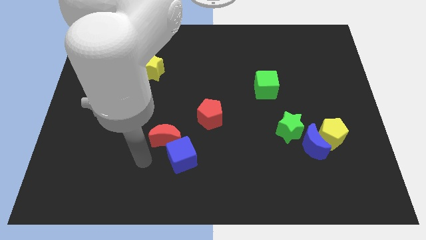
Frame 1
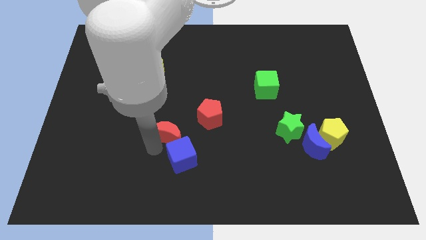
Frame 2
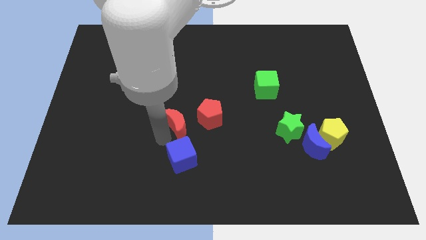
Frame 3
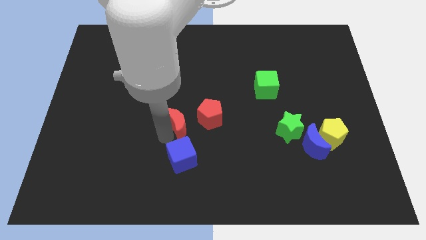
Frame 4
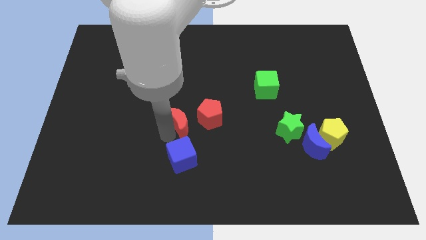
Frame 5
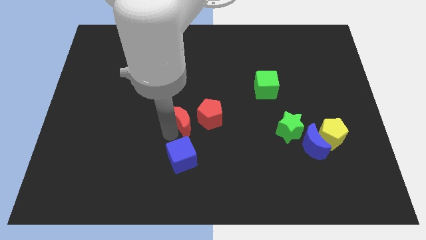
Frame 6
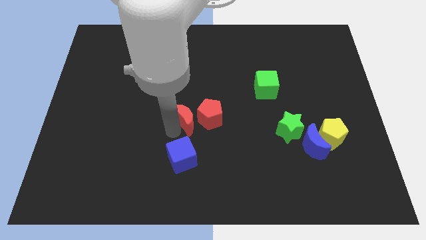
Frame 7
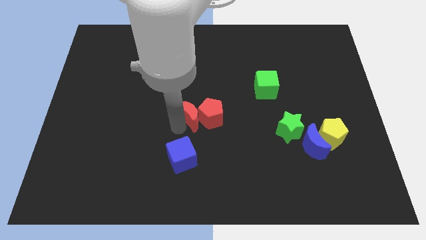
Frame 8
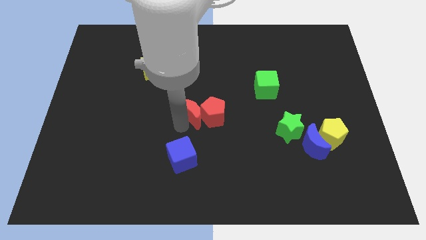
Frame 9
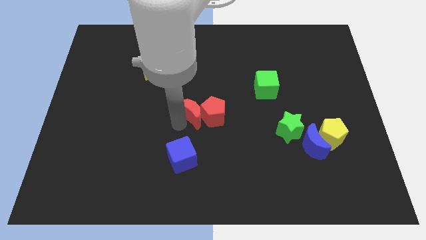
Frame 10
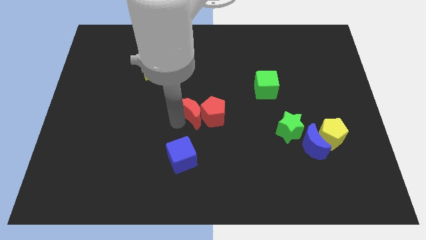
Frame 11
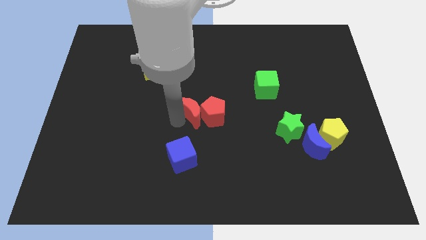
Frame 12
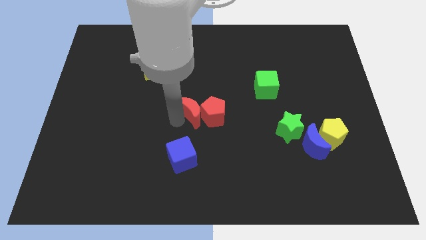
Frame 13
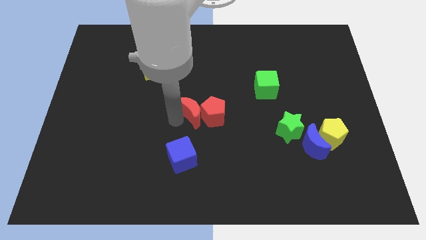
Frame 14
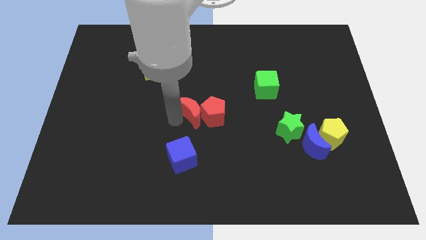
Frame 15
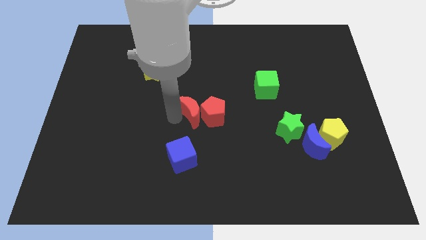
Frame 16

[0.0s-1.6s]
push the red crescent along with the red pentagon to the centre of the board

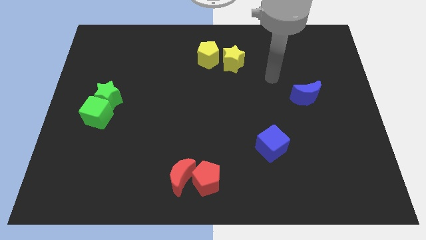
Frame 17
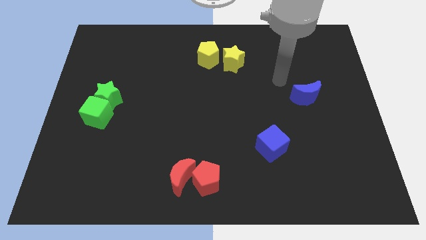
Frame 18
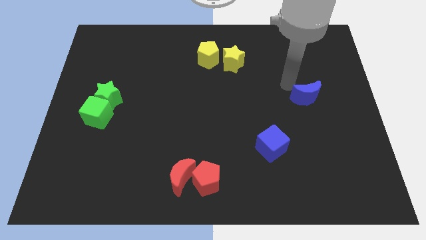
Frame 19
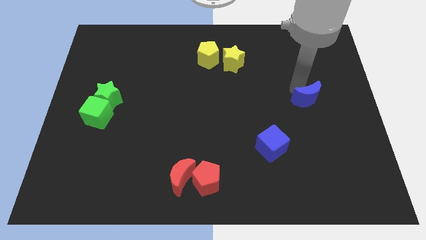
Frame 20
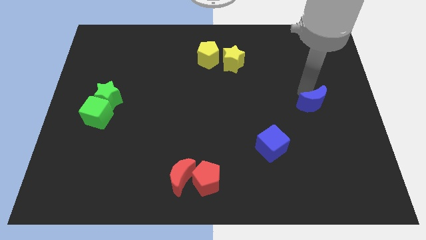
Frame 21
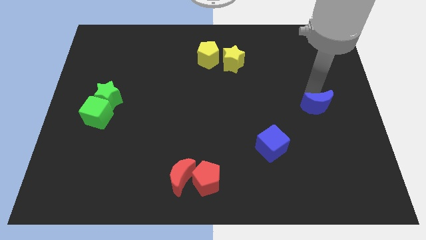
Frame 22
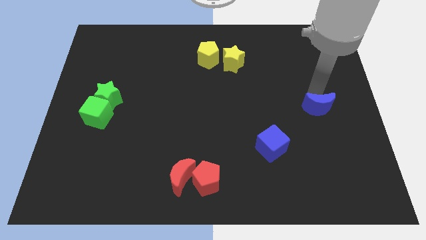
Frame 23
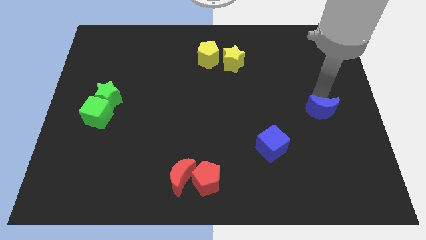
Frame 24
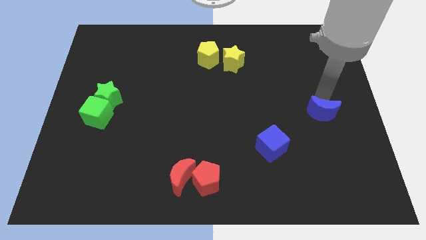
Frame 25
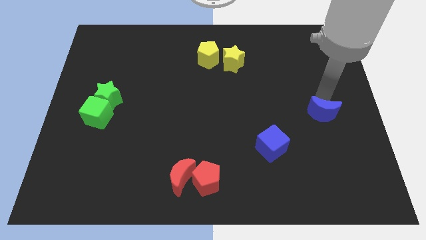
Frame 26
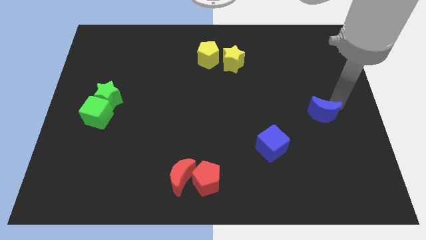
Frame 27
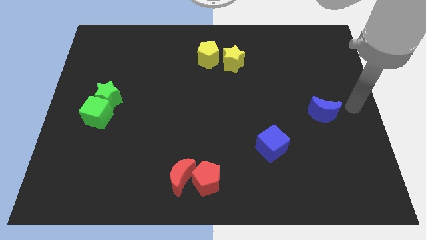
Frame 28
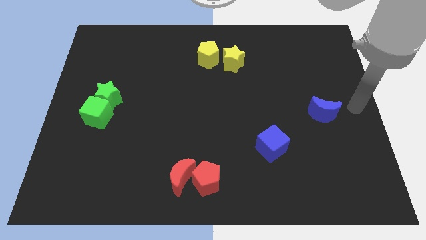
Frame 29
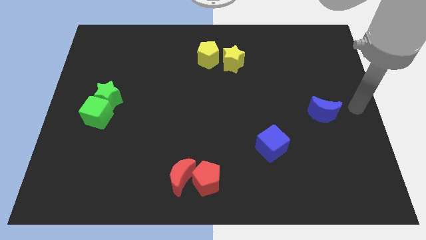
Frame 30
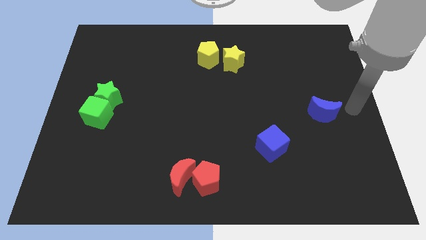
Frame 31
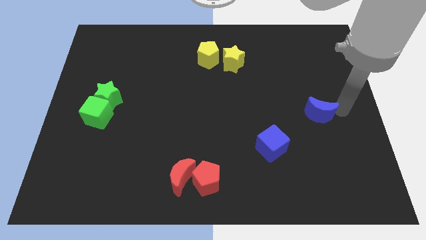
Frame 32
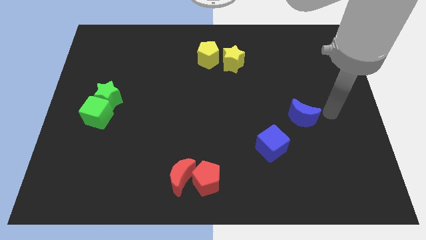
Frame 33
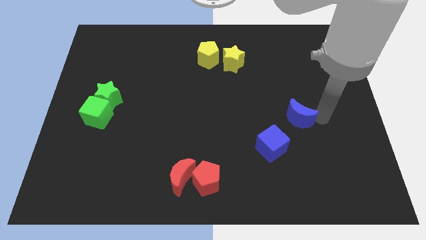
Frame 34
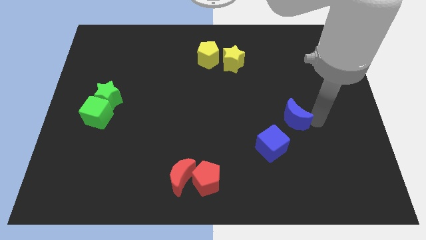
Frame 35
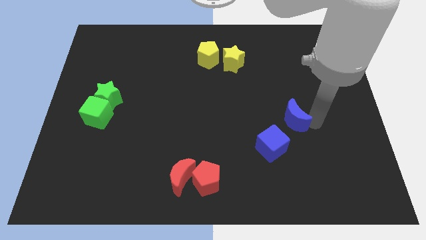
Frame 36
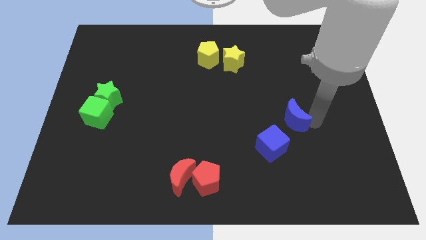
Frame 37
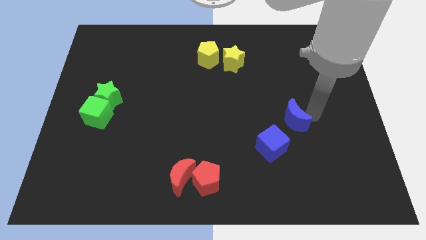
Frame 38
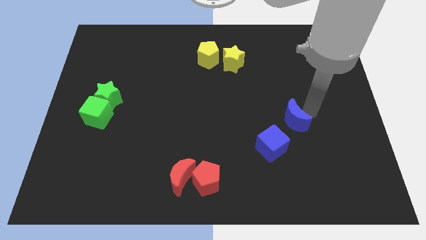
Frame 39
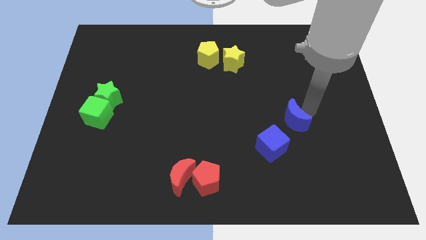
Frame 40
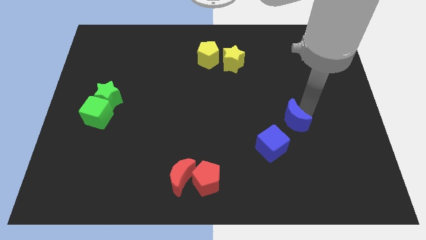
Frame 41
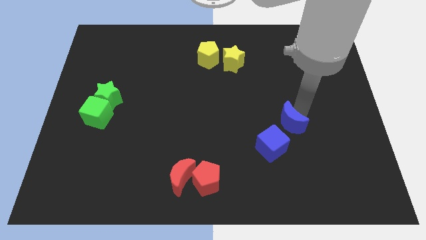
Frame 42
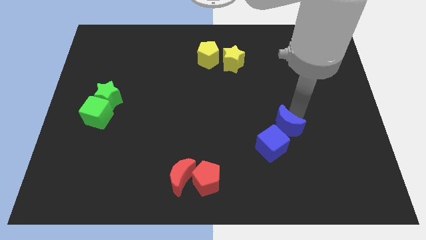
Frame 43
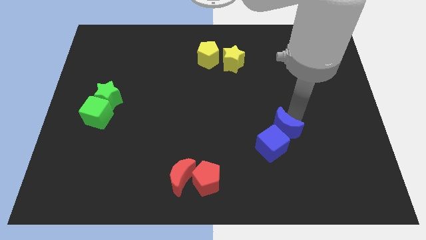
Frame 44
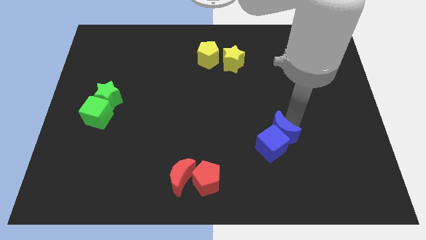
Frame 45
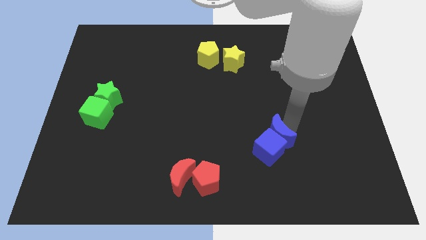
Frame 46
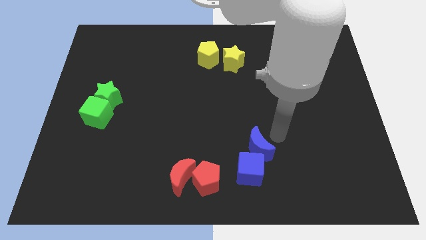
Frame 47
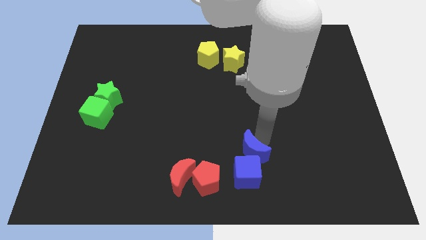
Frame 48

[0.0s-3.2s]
place blue moon towards bottom center

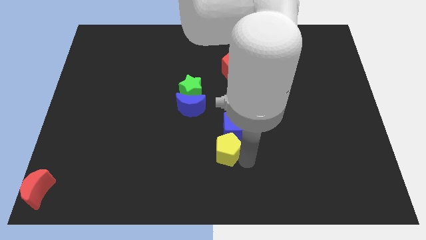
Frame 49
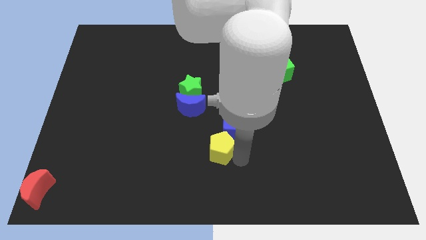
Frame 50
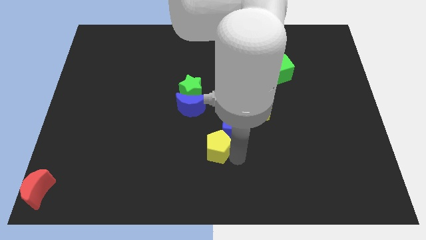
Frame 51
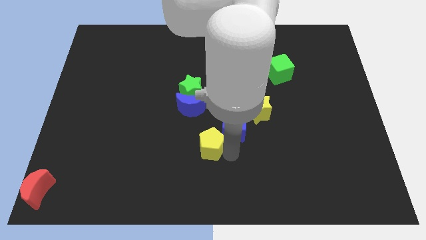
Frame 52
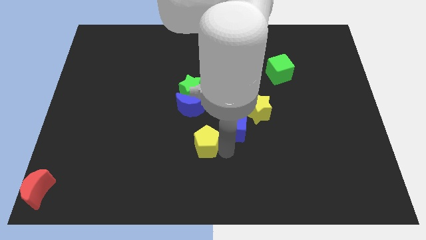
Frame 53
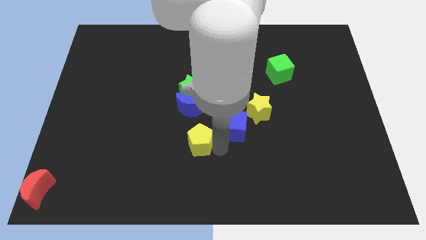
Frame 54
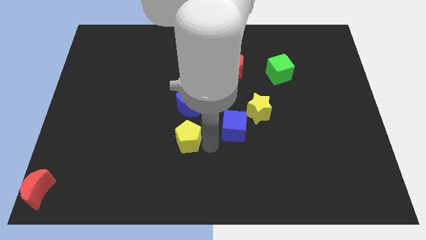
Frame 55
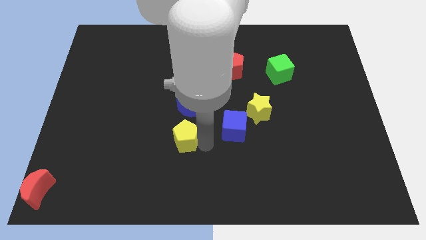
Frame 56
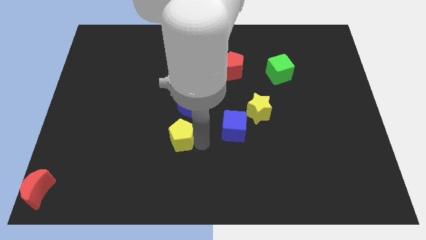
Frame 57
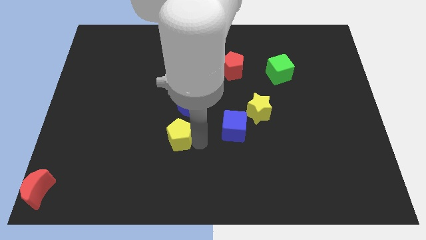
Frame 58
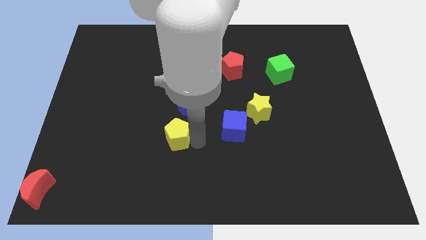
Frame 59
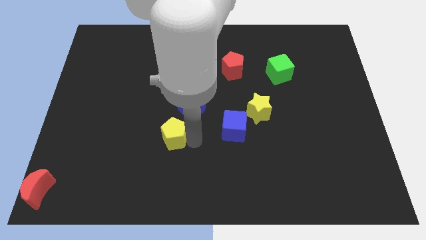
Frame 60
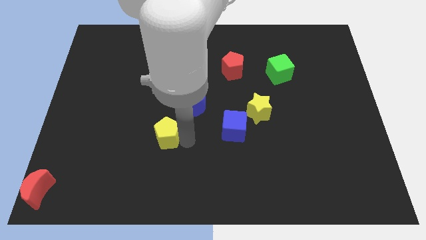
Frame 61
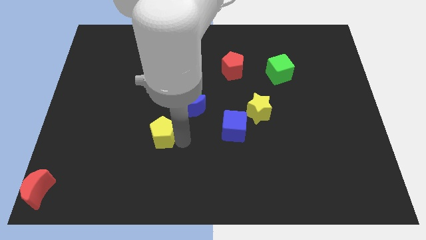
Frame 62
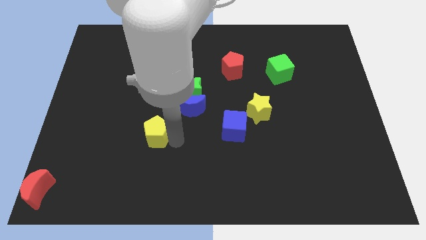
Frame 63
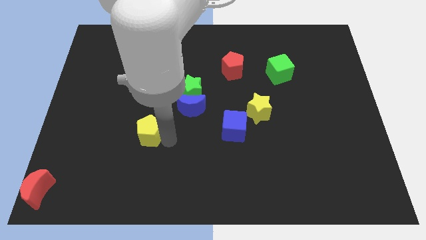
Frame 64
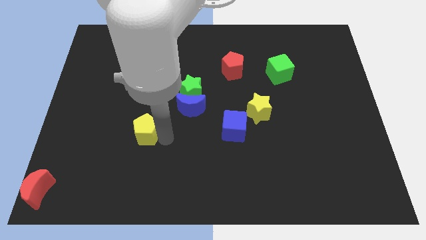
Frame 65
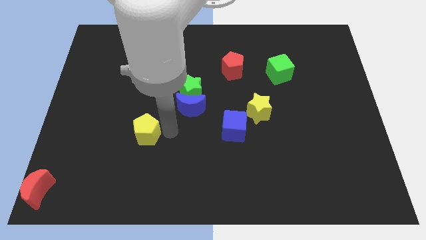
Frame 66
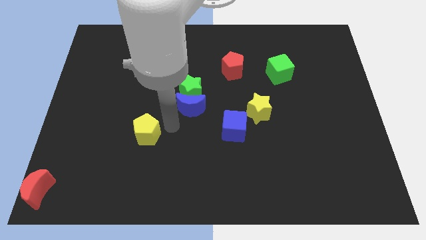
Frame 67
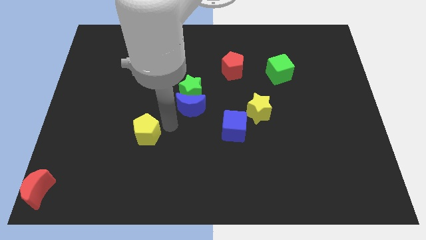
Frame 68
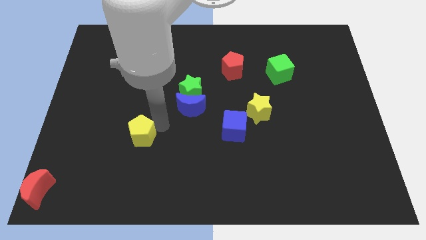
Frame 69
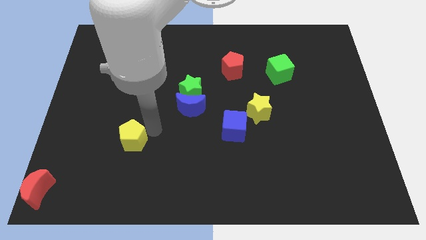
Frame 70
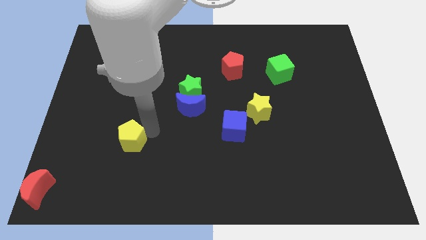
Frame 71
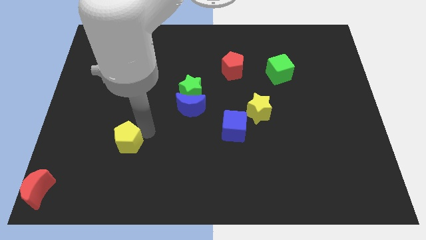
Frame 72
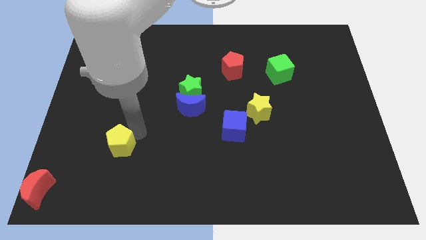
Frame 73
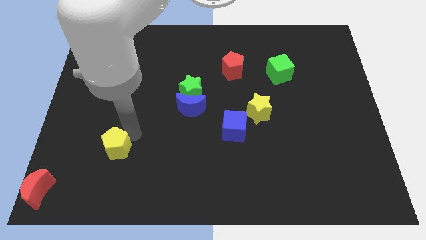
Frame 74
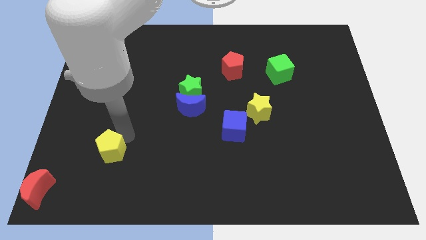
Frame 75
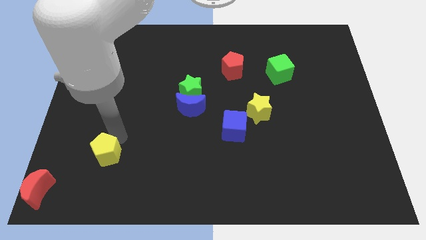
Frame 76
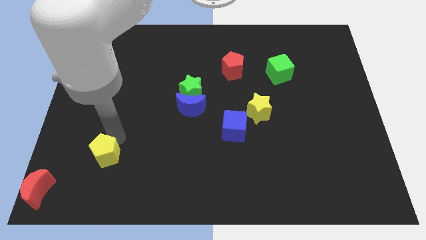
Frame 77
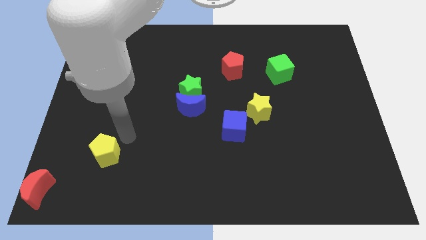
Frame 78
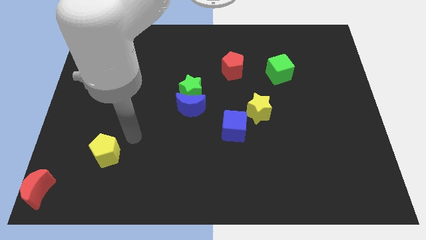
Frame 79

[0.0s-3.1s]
place the yellow pentagon diagonally top right to the red moon

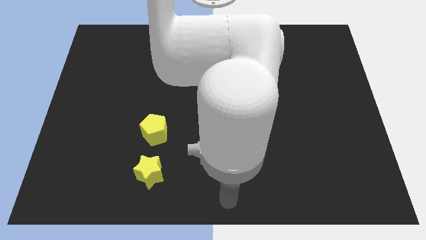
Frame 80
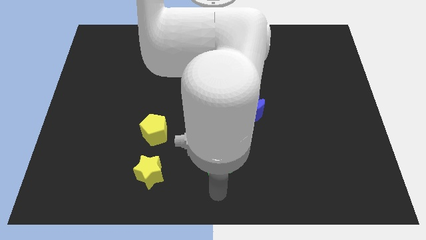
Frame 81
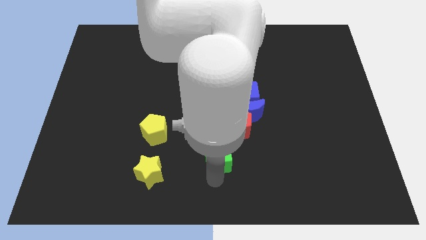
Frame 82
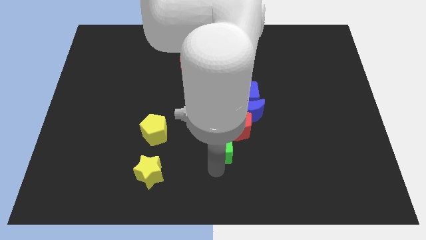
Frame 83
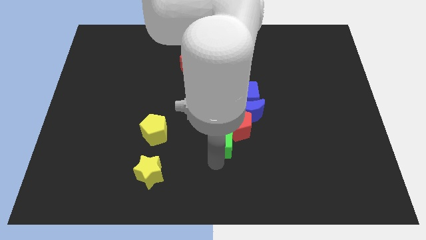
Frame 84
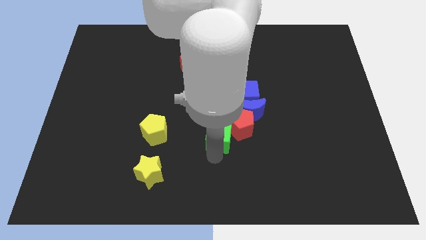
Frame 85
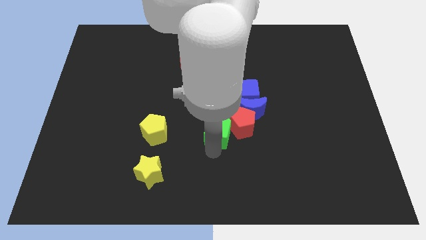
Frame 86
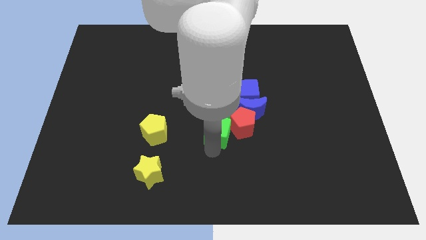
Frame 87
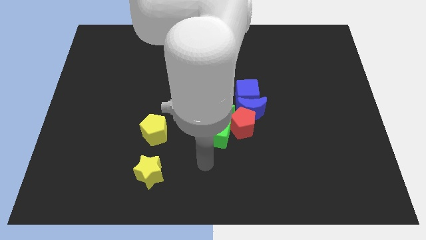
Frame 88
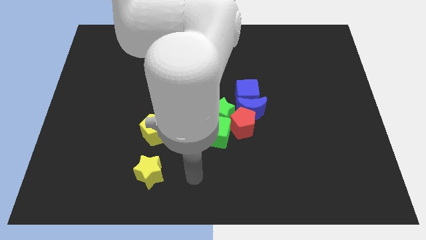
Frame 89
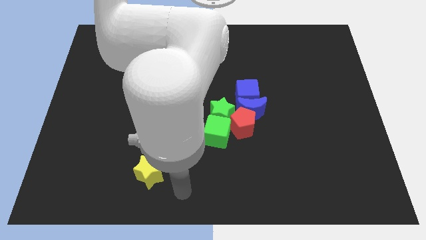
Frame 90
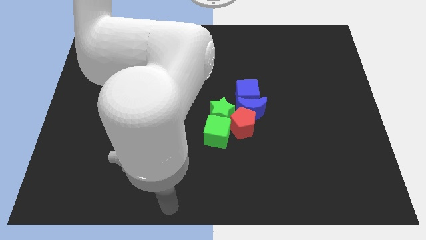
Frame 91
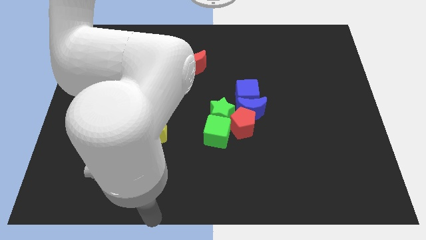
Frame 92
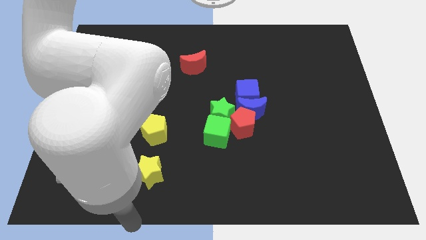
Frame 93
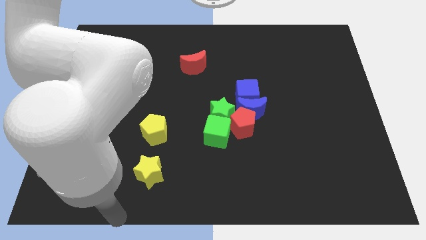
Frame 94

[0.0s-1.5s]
place the green cube under the green star
